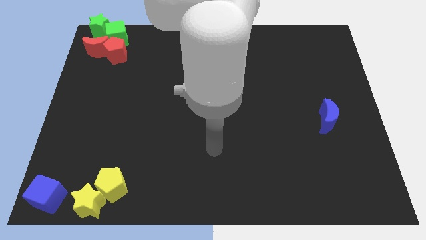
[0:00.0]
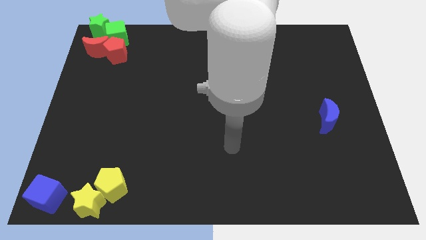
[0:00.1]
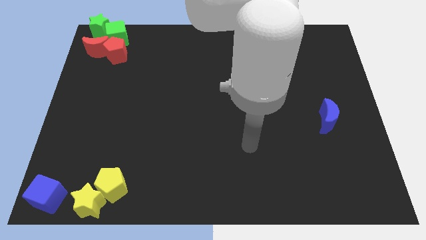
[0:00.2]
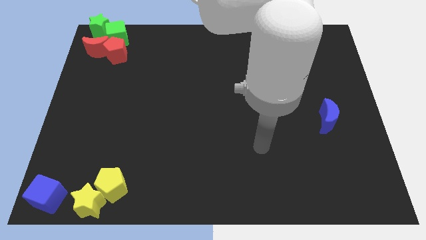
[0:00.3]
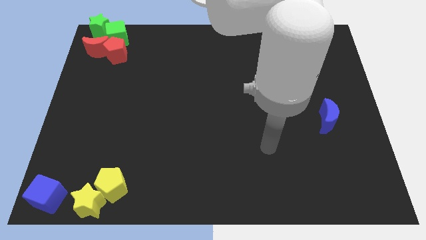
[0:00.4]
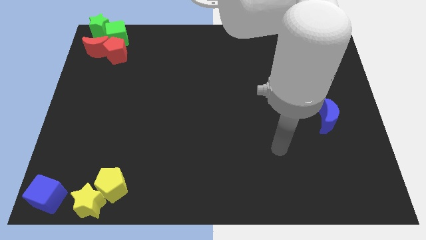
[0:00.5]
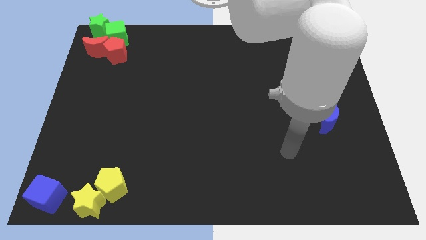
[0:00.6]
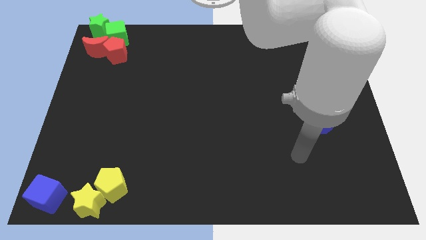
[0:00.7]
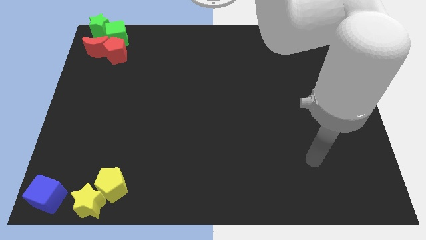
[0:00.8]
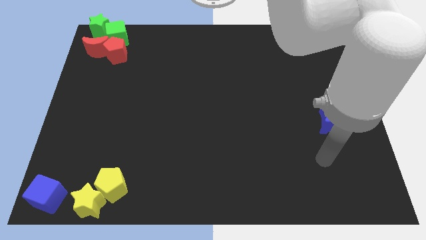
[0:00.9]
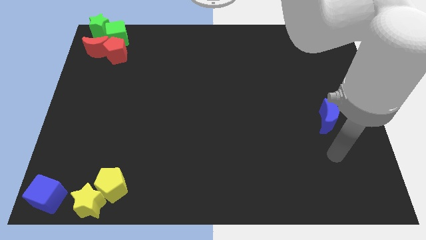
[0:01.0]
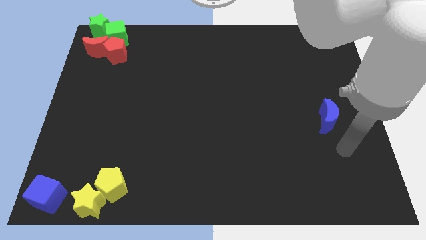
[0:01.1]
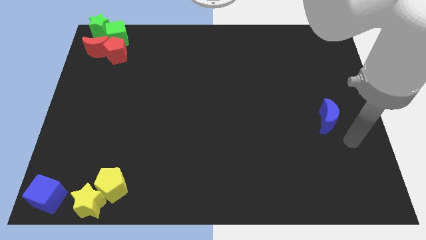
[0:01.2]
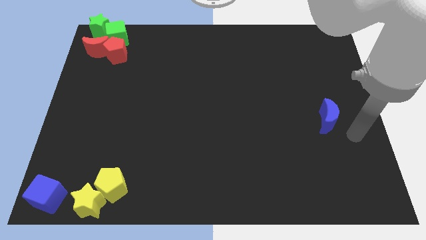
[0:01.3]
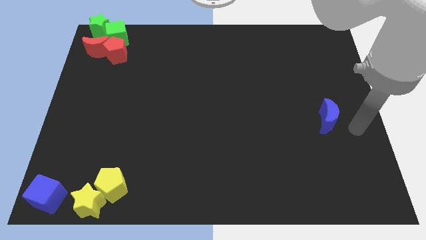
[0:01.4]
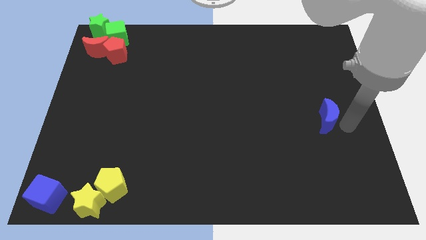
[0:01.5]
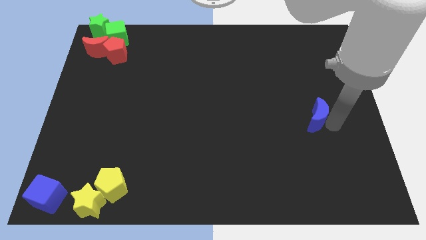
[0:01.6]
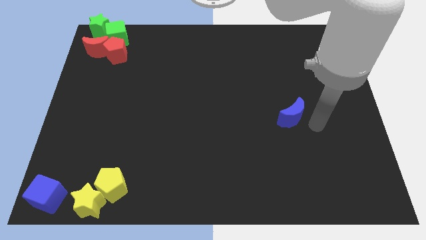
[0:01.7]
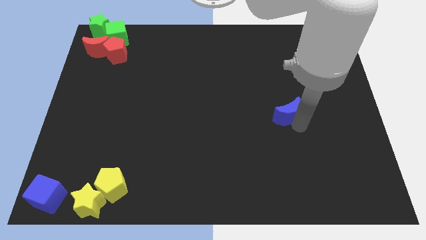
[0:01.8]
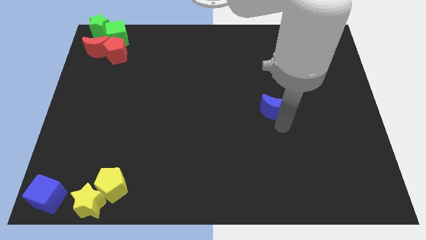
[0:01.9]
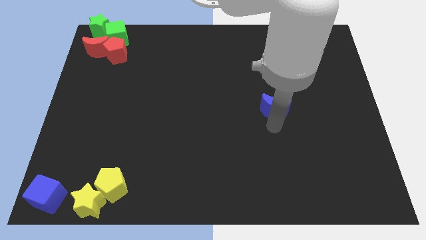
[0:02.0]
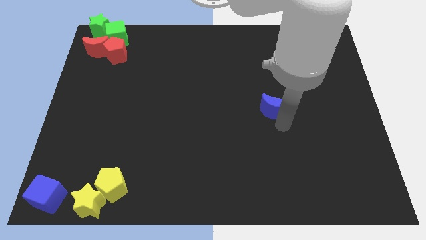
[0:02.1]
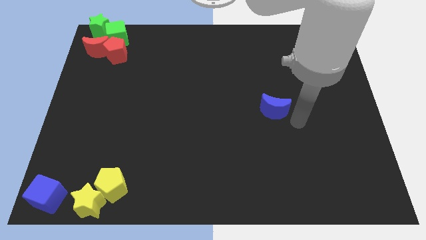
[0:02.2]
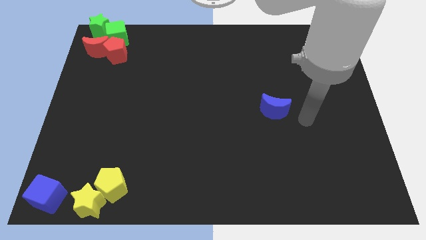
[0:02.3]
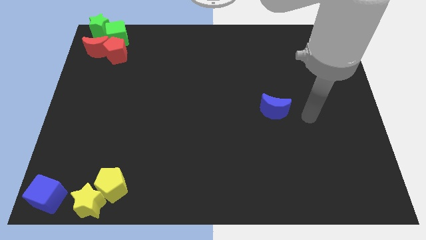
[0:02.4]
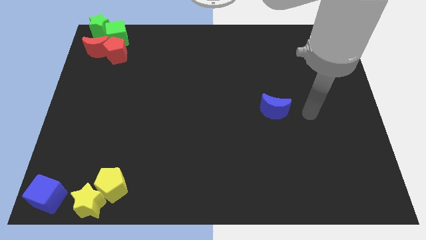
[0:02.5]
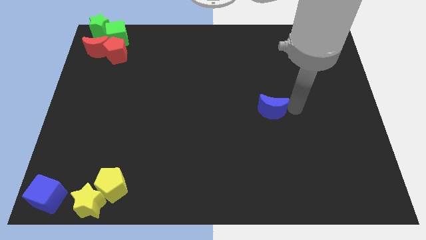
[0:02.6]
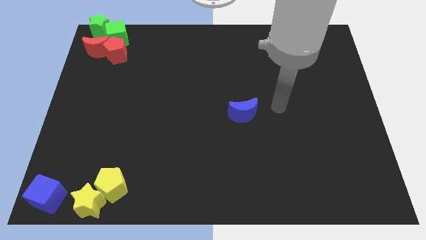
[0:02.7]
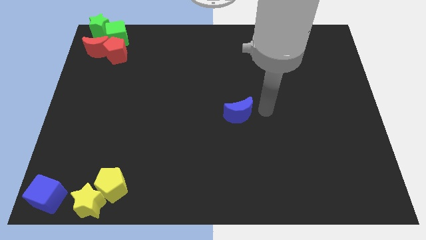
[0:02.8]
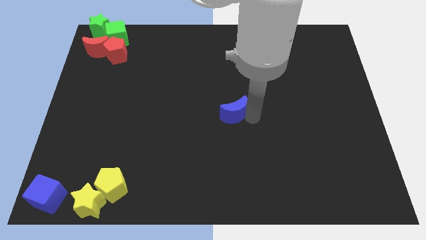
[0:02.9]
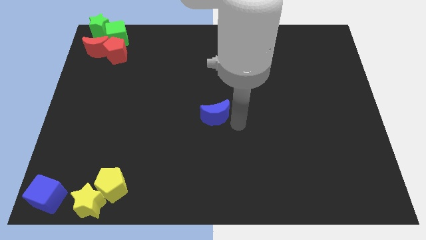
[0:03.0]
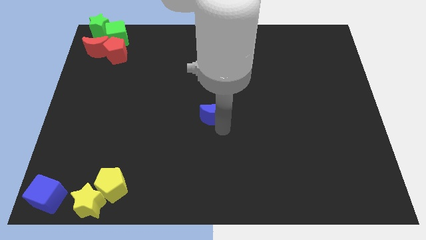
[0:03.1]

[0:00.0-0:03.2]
place blue moon at the center

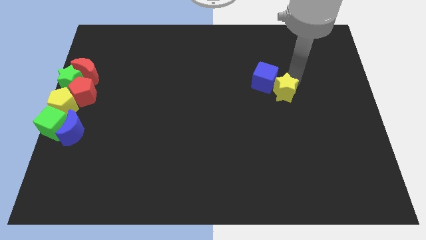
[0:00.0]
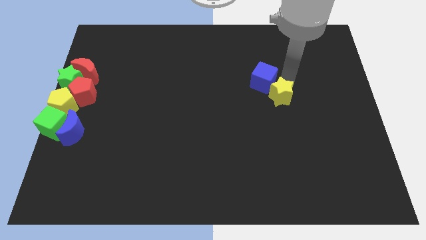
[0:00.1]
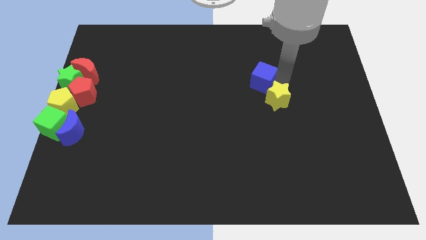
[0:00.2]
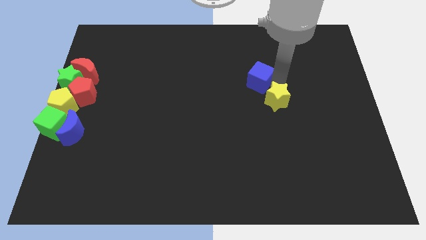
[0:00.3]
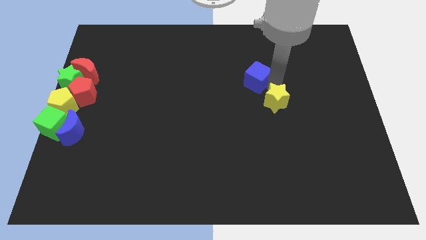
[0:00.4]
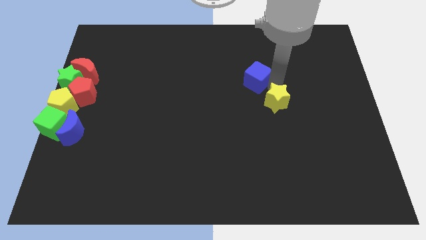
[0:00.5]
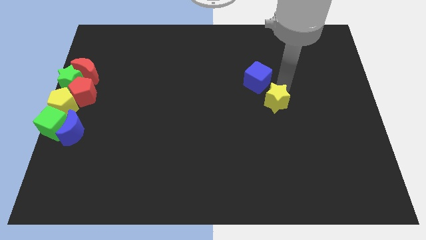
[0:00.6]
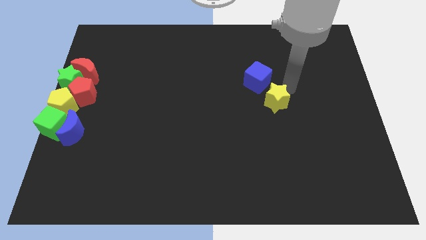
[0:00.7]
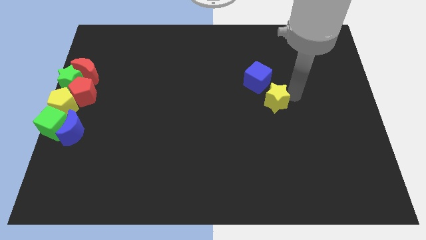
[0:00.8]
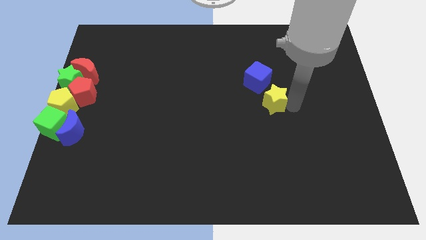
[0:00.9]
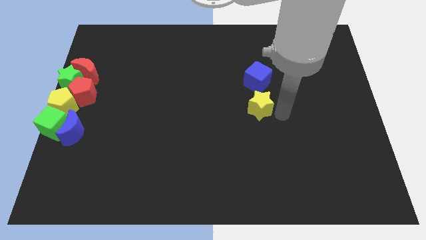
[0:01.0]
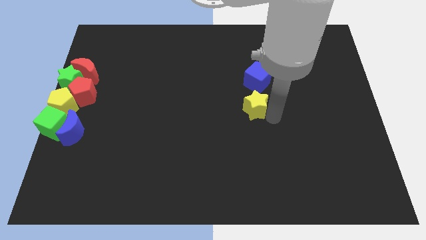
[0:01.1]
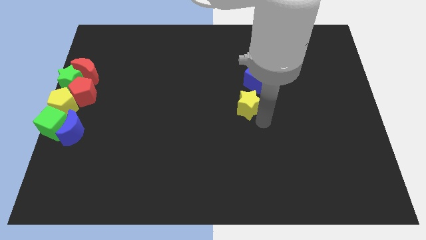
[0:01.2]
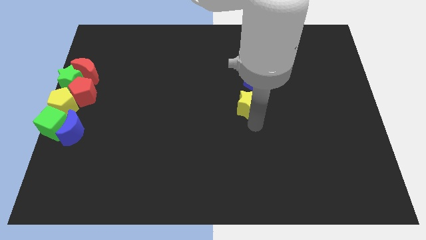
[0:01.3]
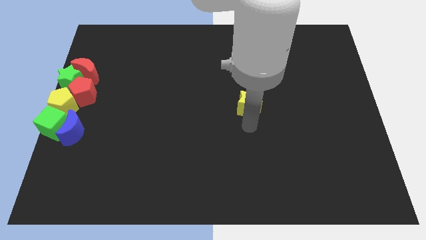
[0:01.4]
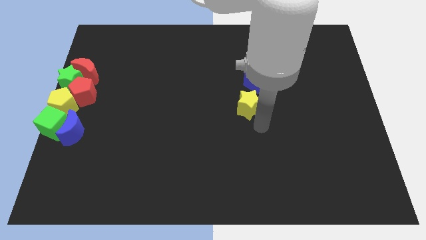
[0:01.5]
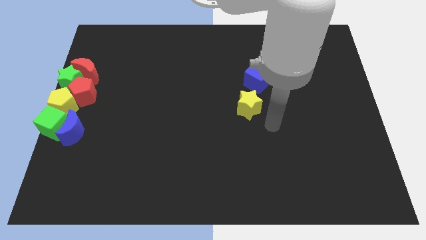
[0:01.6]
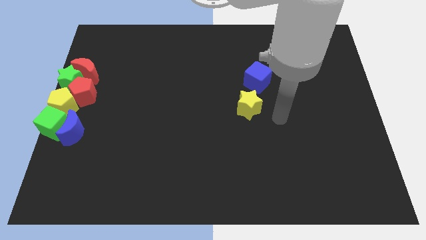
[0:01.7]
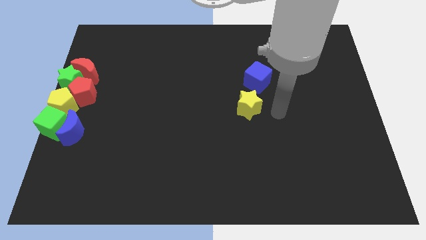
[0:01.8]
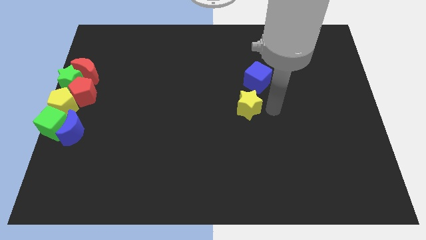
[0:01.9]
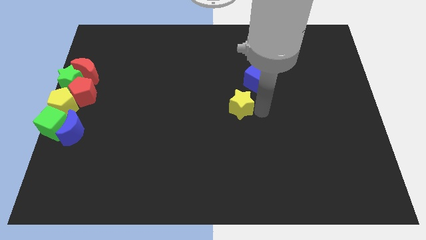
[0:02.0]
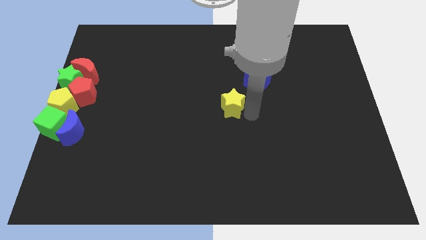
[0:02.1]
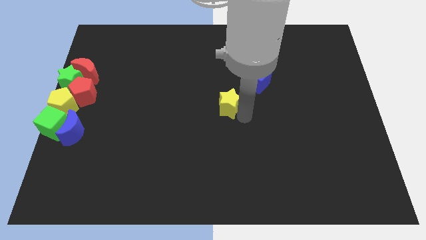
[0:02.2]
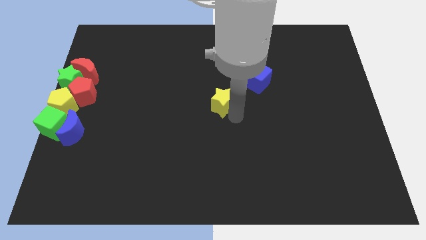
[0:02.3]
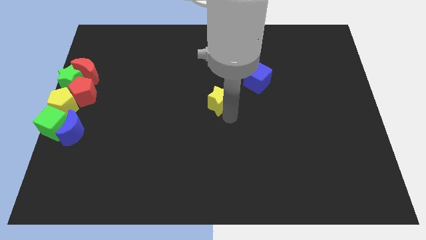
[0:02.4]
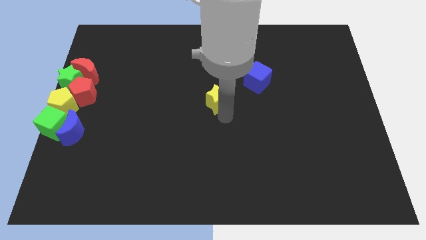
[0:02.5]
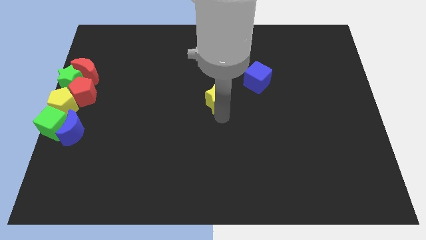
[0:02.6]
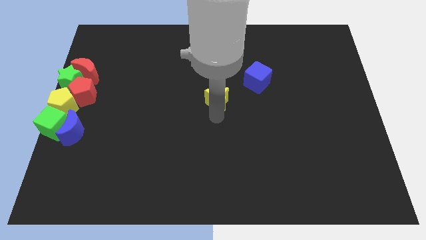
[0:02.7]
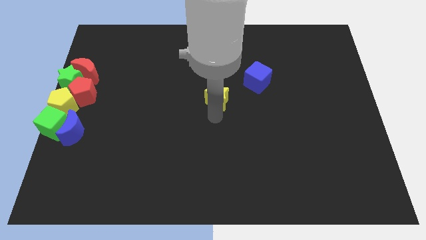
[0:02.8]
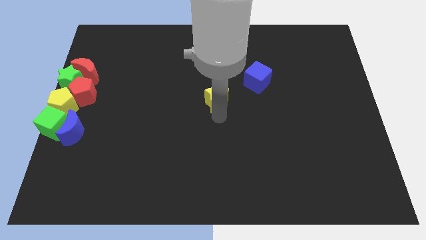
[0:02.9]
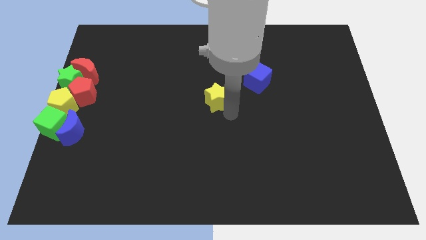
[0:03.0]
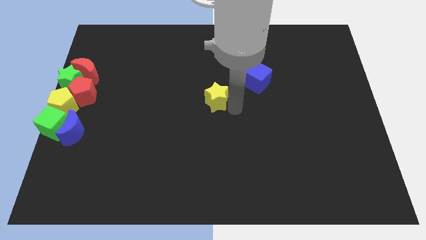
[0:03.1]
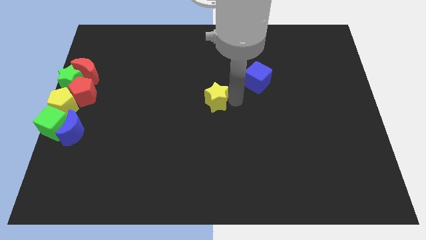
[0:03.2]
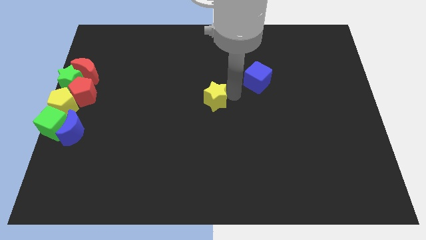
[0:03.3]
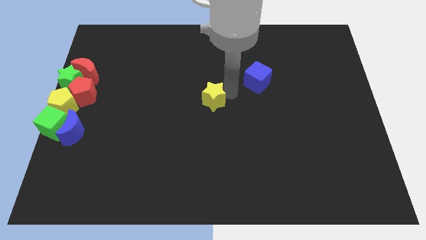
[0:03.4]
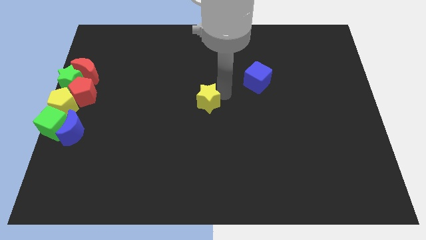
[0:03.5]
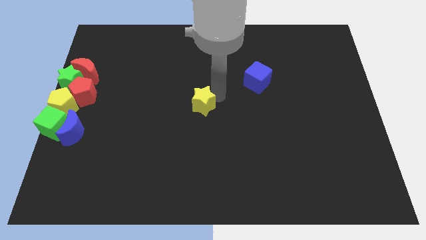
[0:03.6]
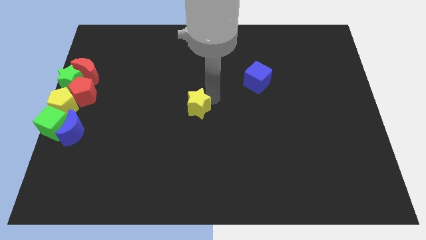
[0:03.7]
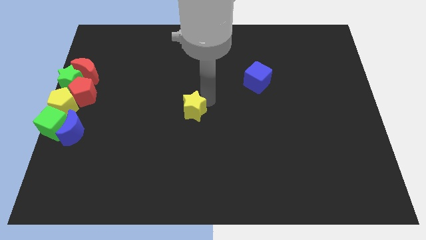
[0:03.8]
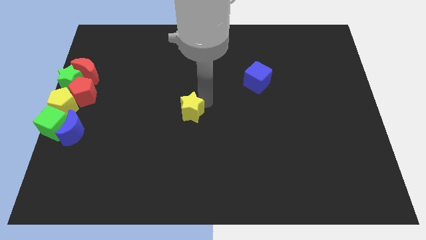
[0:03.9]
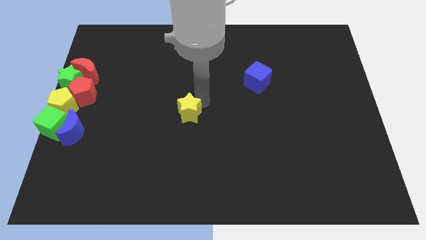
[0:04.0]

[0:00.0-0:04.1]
separate the blue cube and yellow star

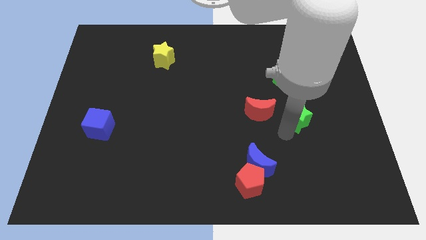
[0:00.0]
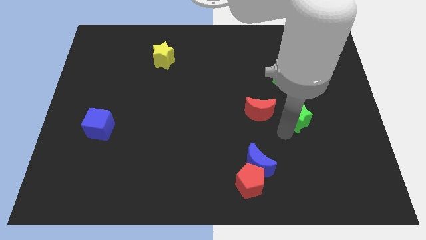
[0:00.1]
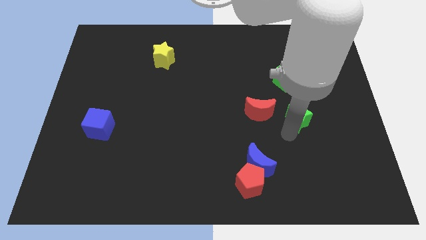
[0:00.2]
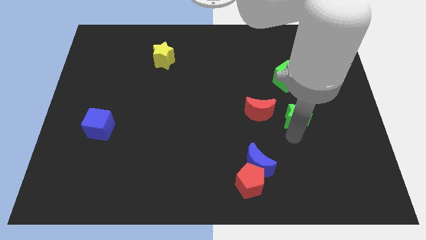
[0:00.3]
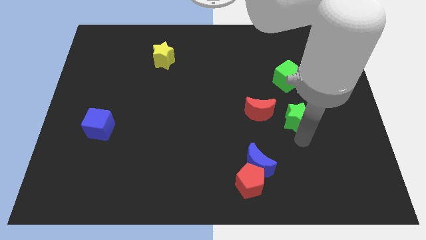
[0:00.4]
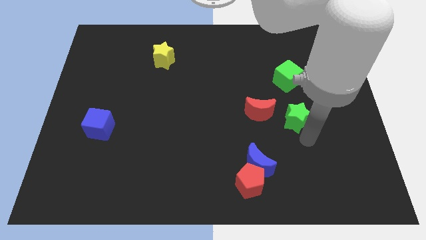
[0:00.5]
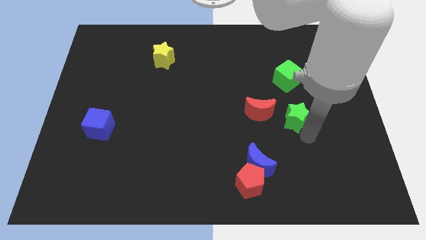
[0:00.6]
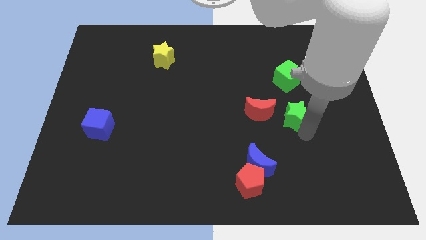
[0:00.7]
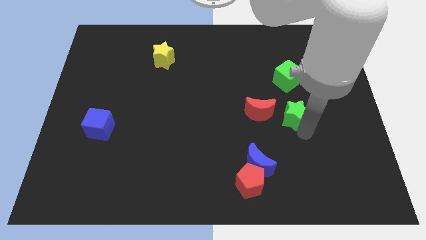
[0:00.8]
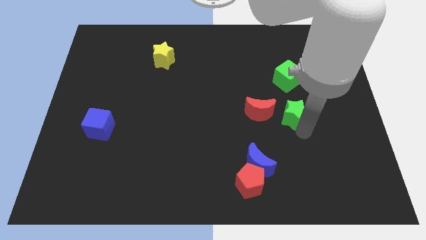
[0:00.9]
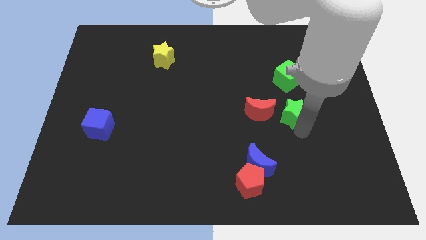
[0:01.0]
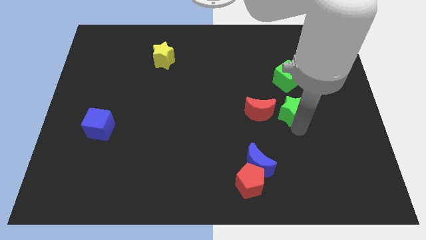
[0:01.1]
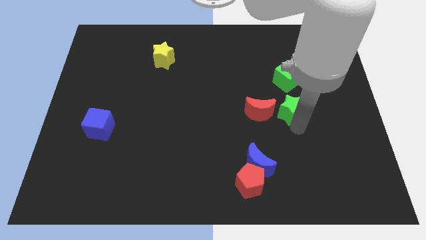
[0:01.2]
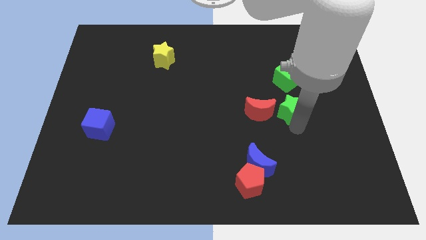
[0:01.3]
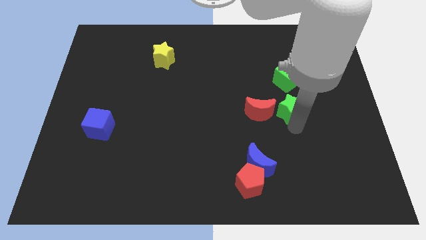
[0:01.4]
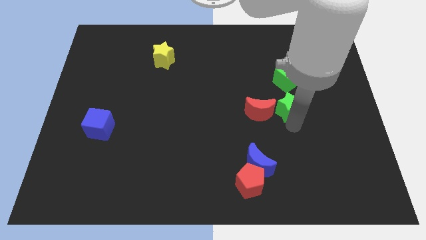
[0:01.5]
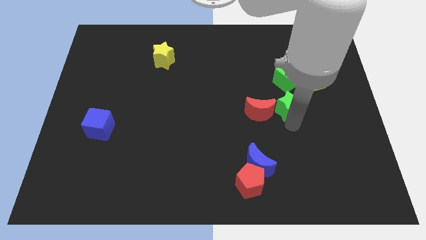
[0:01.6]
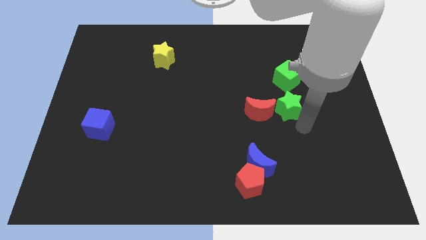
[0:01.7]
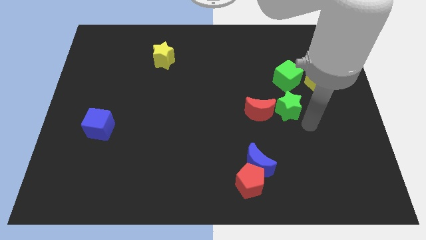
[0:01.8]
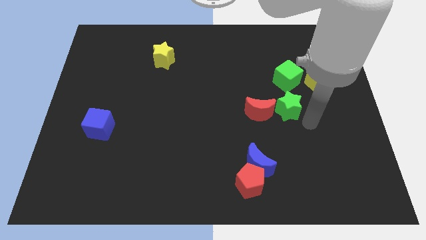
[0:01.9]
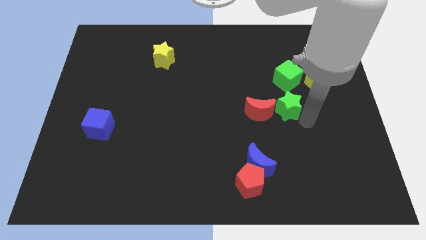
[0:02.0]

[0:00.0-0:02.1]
push green star into red moon
